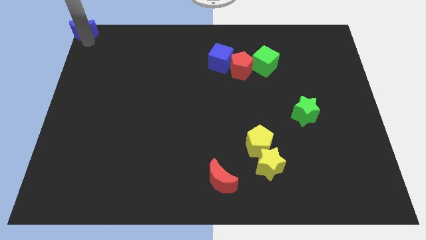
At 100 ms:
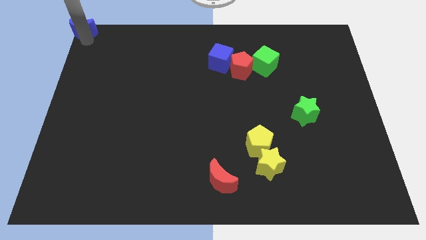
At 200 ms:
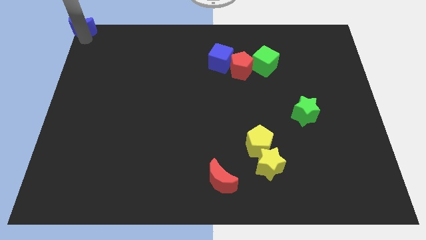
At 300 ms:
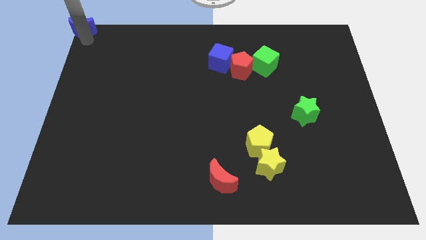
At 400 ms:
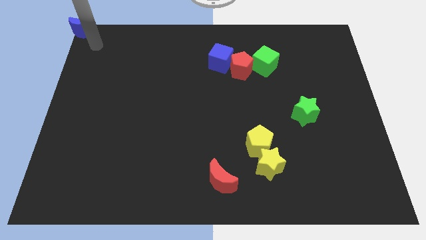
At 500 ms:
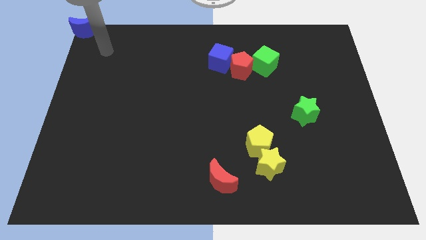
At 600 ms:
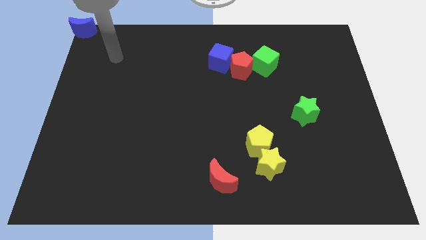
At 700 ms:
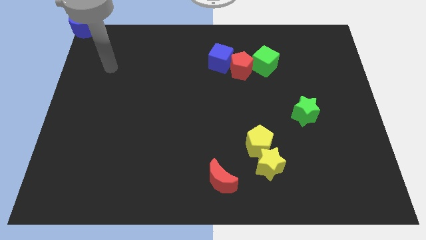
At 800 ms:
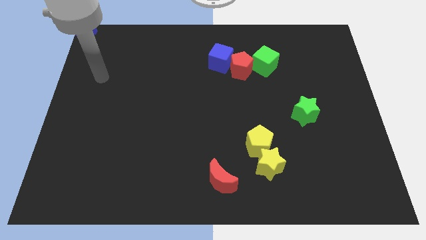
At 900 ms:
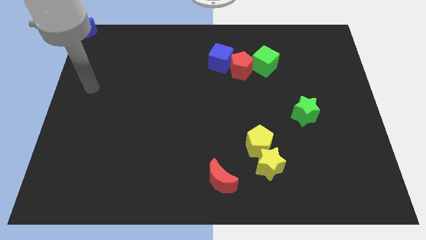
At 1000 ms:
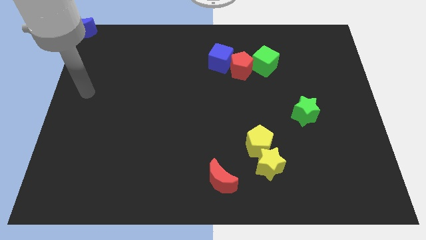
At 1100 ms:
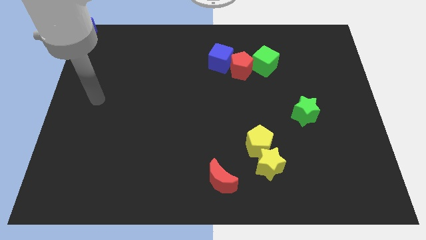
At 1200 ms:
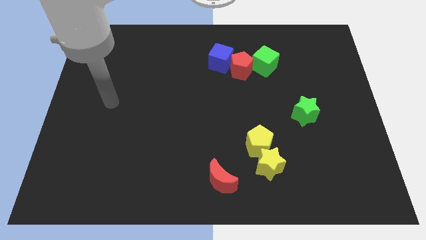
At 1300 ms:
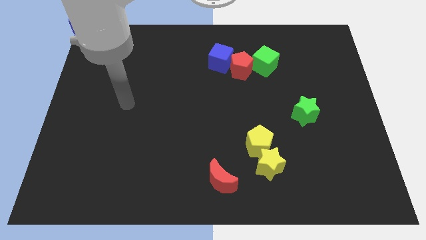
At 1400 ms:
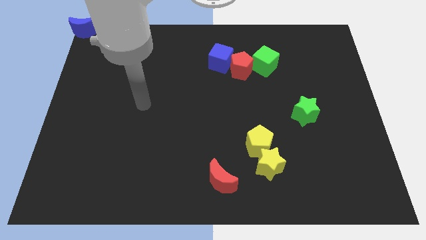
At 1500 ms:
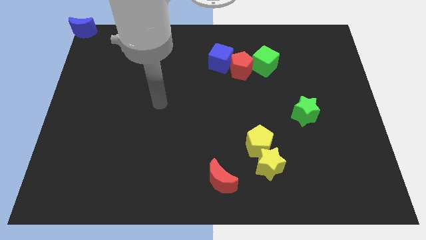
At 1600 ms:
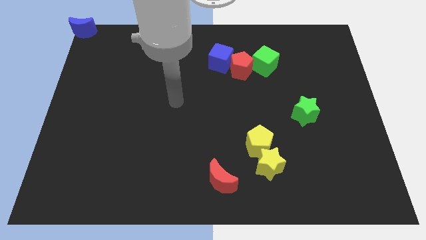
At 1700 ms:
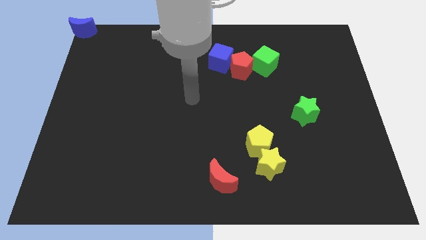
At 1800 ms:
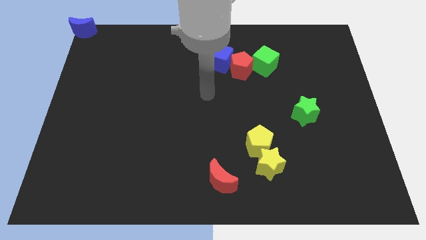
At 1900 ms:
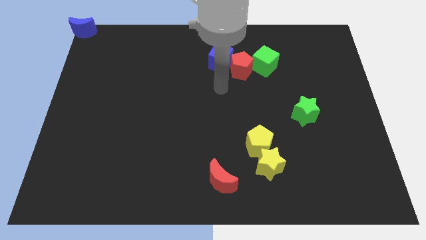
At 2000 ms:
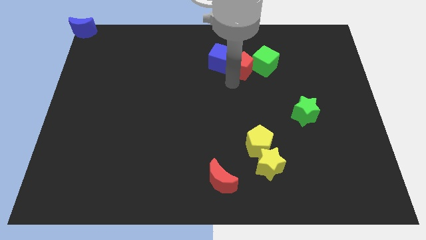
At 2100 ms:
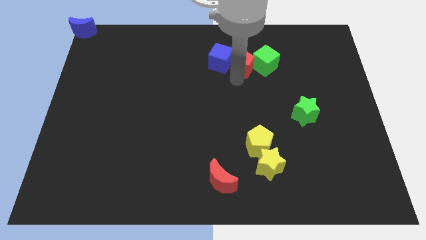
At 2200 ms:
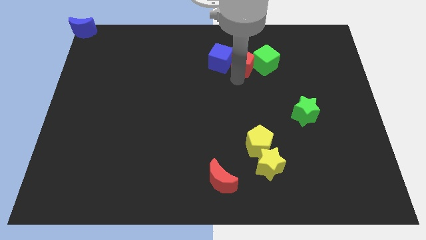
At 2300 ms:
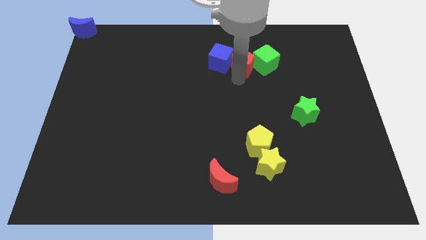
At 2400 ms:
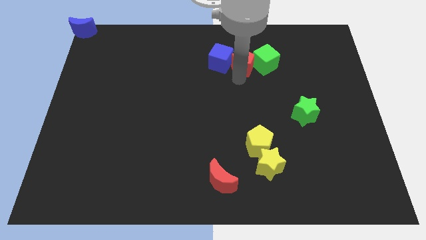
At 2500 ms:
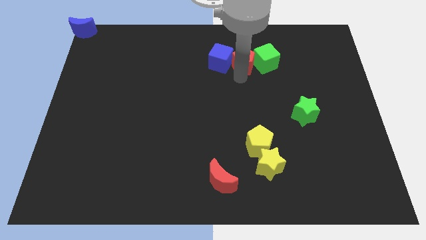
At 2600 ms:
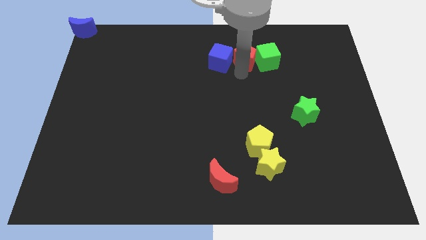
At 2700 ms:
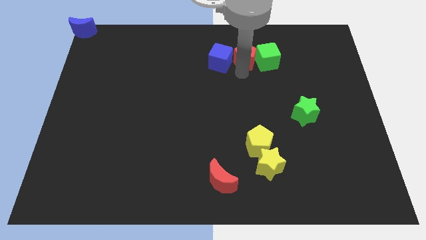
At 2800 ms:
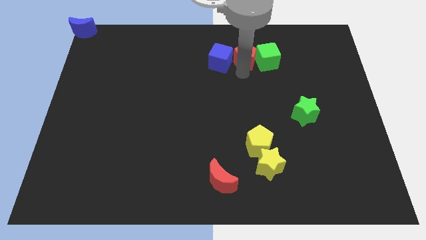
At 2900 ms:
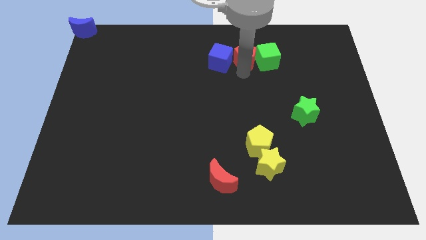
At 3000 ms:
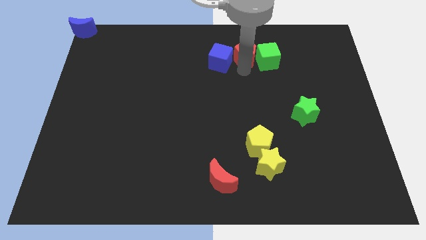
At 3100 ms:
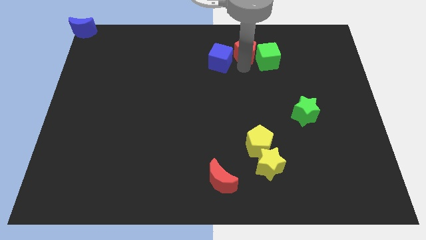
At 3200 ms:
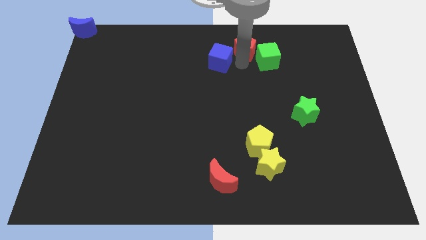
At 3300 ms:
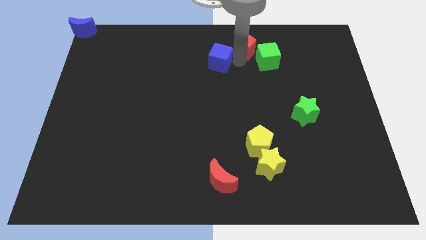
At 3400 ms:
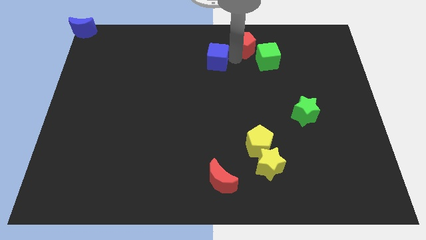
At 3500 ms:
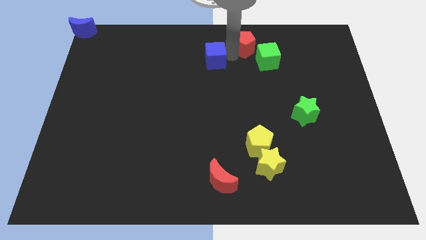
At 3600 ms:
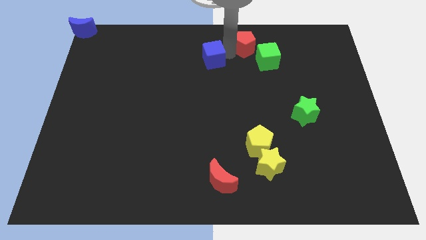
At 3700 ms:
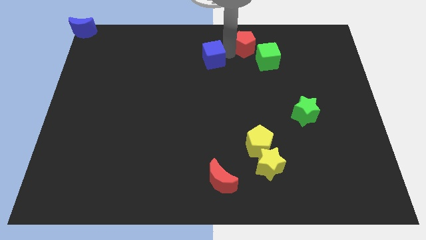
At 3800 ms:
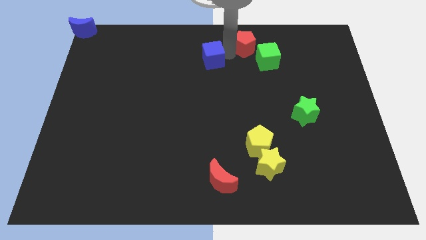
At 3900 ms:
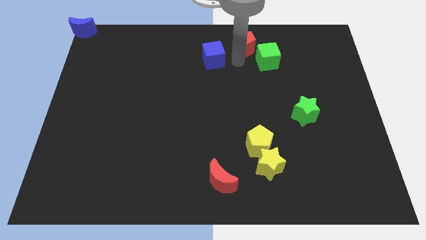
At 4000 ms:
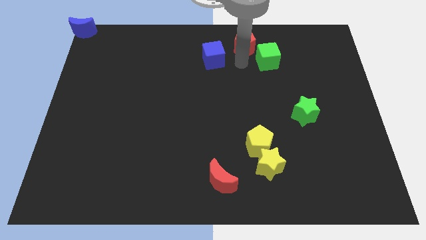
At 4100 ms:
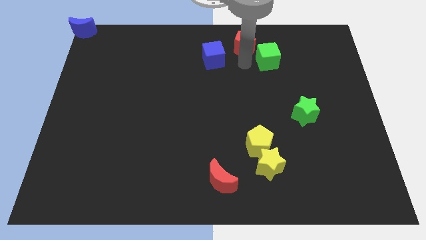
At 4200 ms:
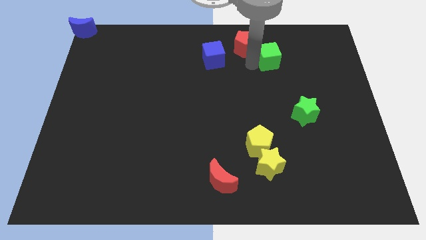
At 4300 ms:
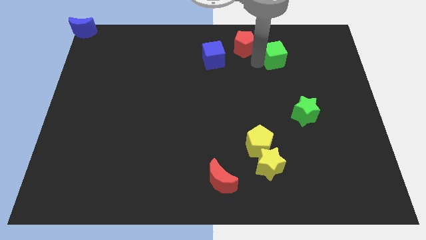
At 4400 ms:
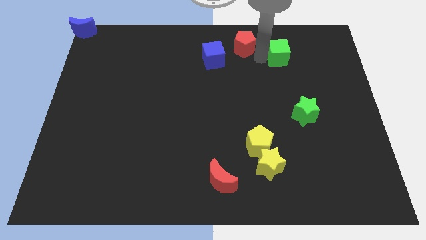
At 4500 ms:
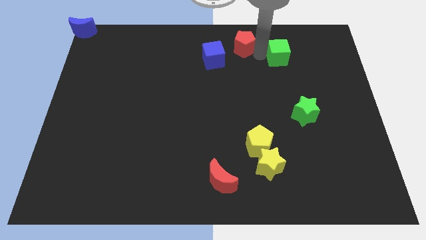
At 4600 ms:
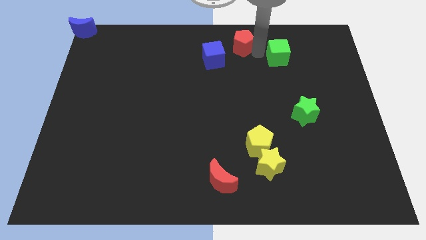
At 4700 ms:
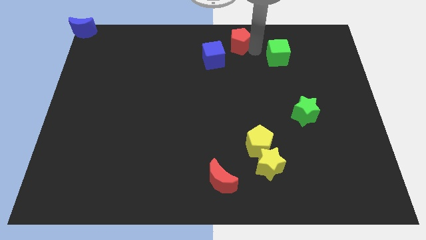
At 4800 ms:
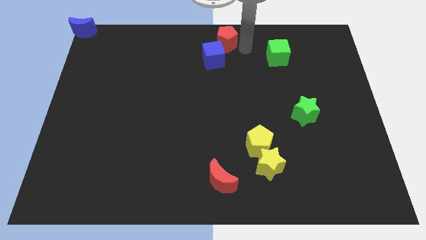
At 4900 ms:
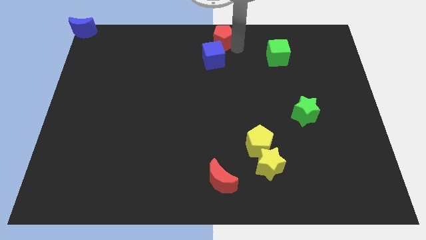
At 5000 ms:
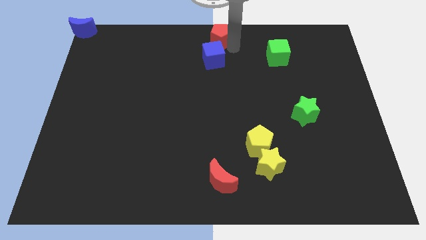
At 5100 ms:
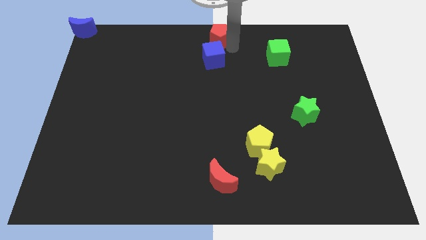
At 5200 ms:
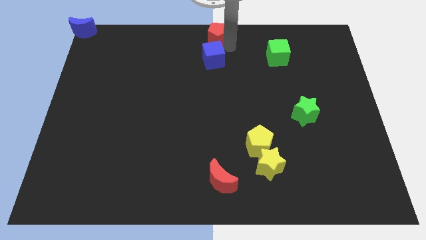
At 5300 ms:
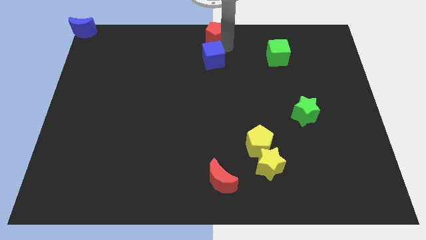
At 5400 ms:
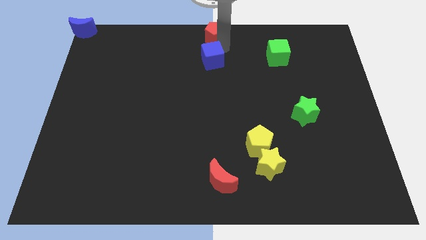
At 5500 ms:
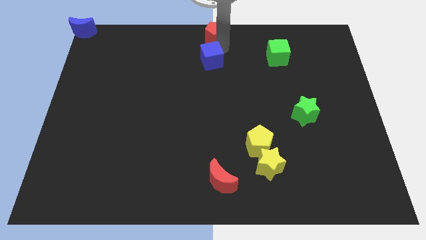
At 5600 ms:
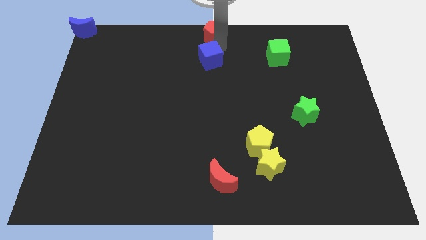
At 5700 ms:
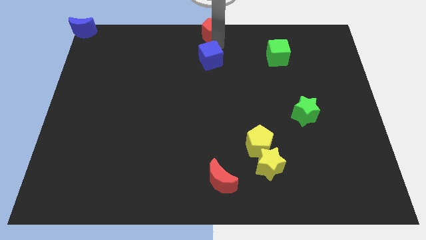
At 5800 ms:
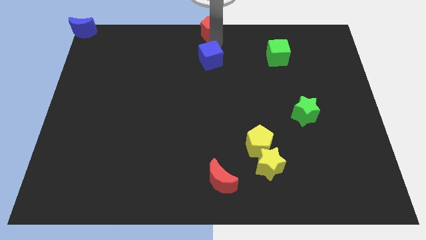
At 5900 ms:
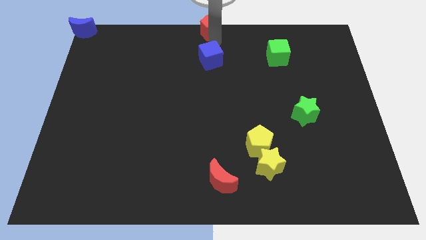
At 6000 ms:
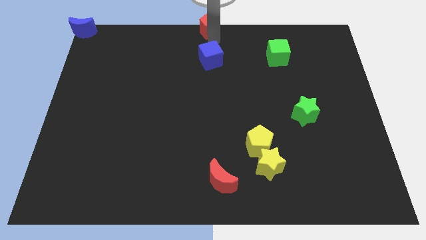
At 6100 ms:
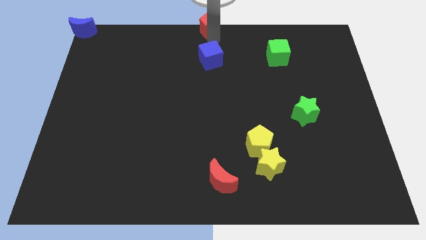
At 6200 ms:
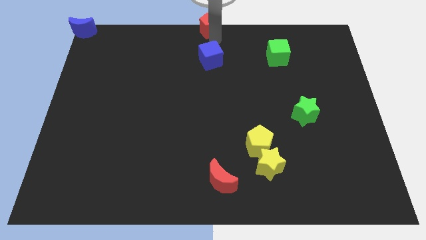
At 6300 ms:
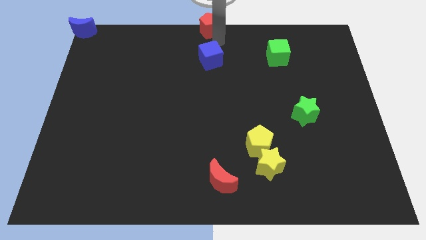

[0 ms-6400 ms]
separate the red pentagon from blue cube and green cube

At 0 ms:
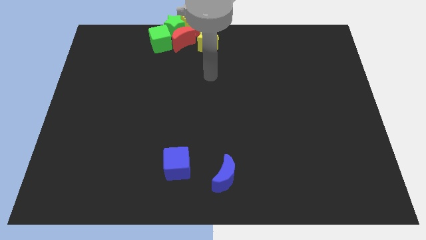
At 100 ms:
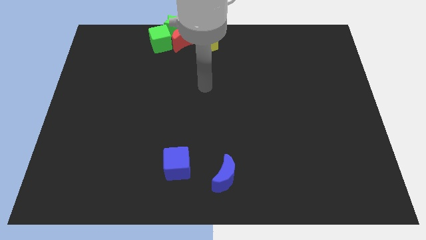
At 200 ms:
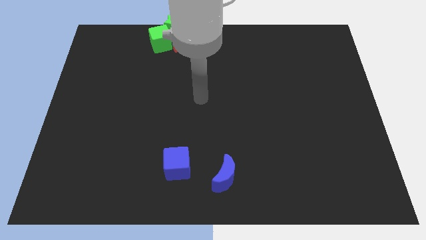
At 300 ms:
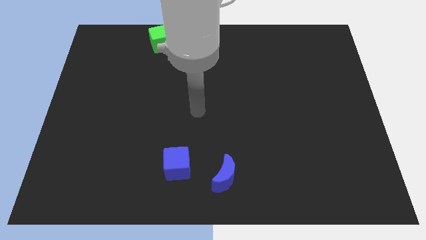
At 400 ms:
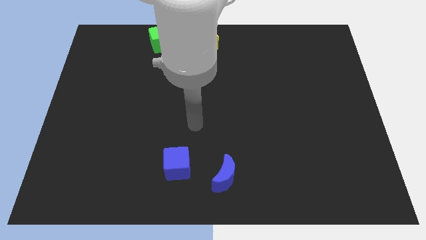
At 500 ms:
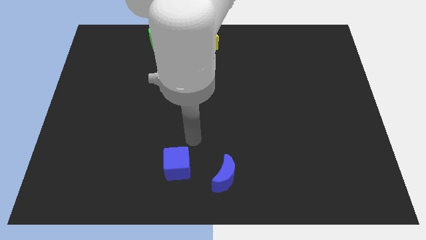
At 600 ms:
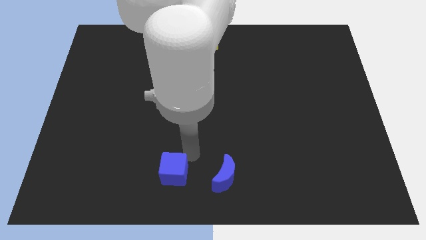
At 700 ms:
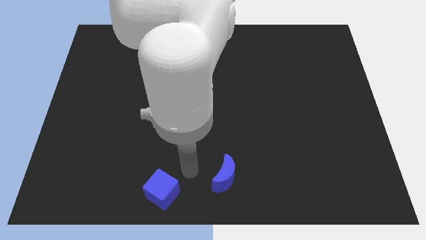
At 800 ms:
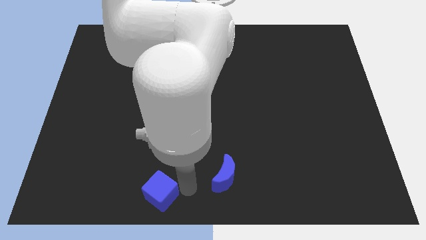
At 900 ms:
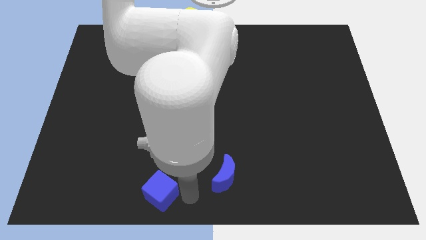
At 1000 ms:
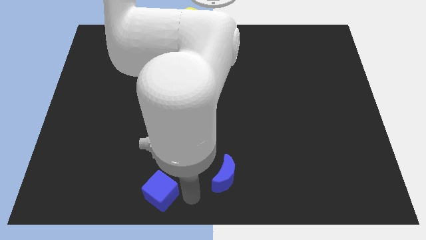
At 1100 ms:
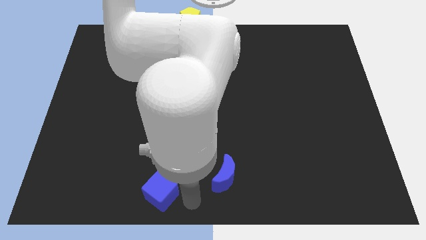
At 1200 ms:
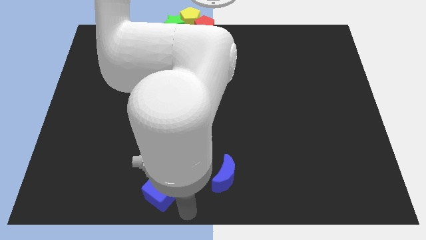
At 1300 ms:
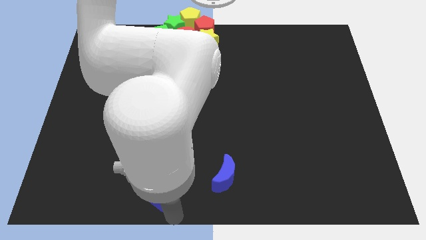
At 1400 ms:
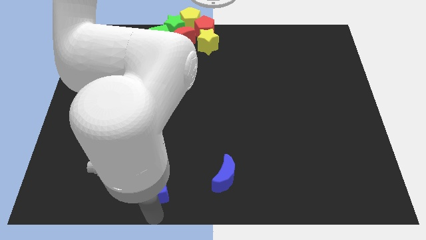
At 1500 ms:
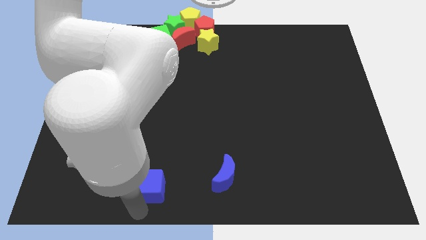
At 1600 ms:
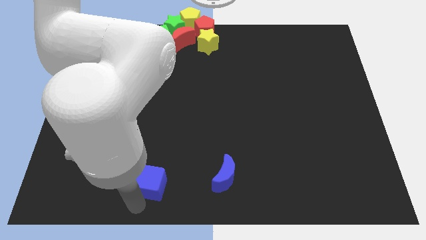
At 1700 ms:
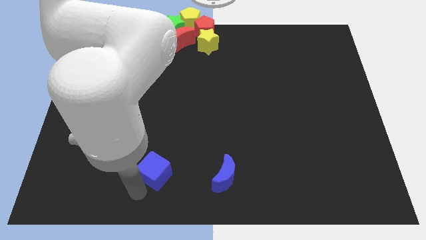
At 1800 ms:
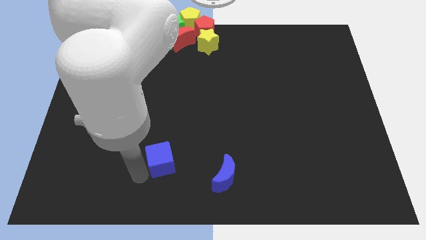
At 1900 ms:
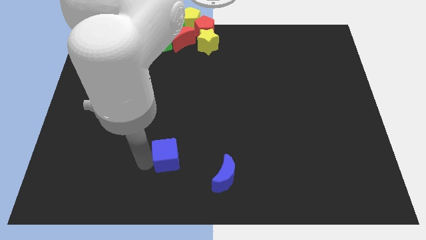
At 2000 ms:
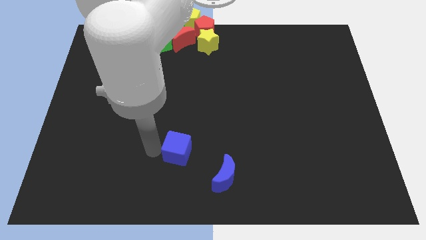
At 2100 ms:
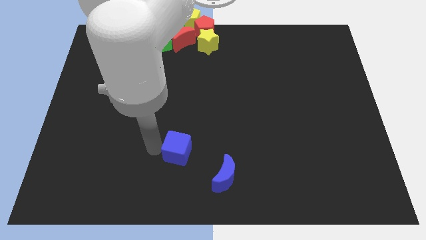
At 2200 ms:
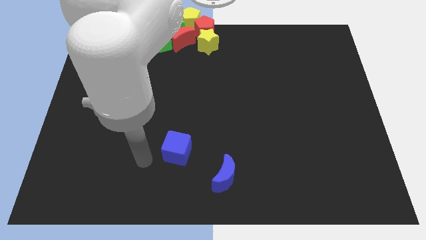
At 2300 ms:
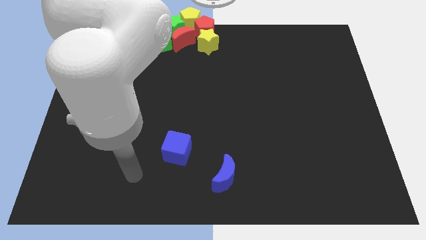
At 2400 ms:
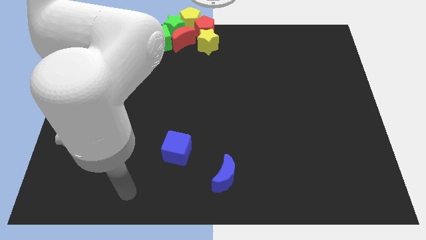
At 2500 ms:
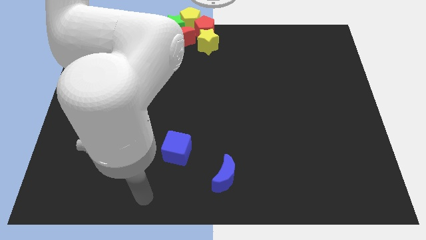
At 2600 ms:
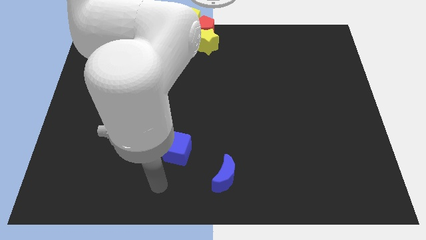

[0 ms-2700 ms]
place the blue cube diagonally to the blue moon

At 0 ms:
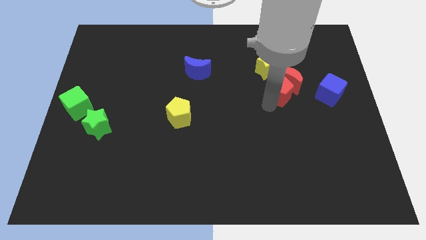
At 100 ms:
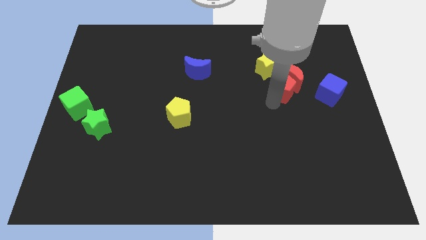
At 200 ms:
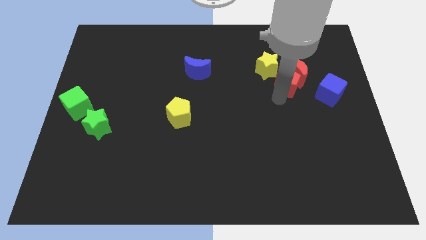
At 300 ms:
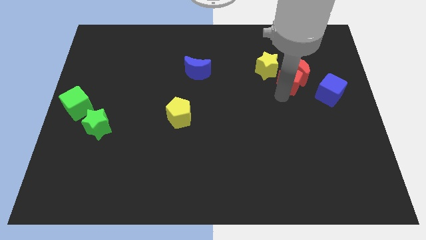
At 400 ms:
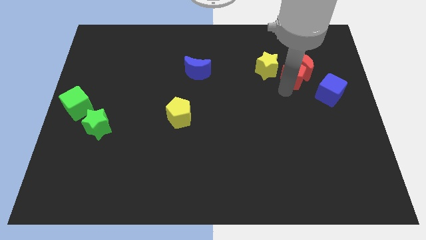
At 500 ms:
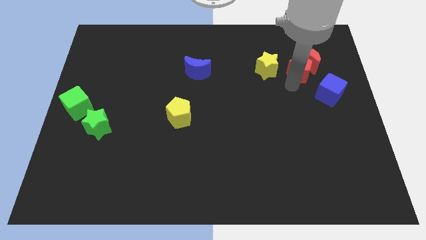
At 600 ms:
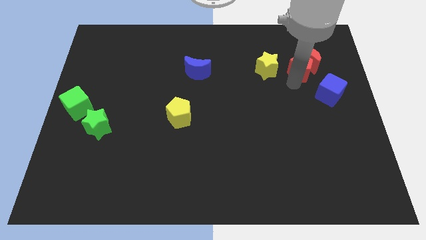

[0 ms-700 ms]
push the red pentagon along with the red crescent
